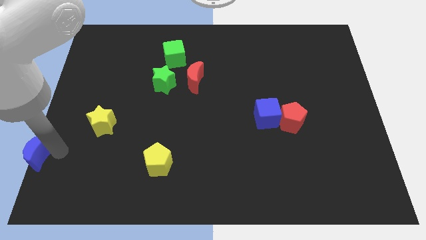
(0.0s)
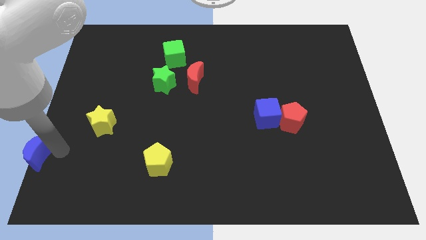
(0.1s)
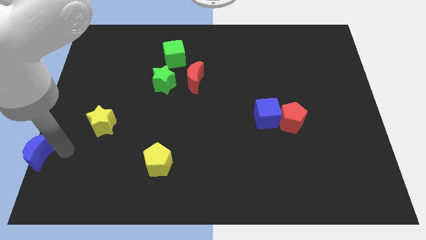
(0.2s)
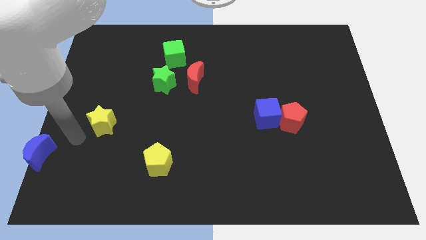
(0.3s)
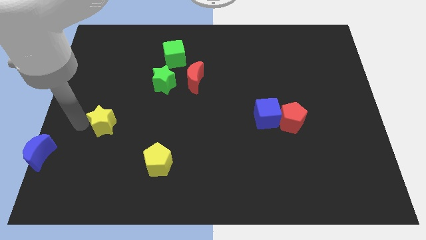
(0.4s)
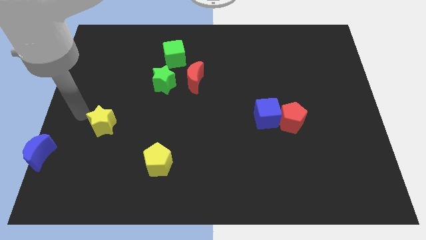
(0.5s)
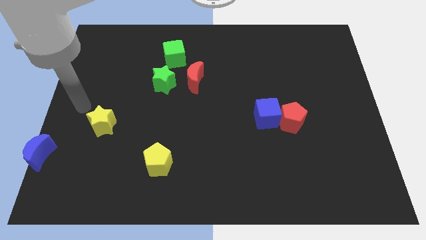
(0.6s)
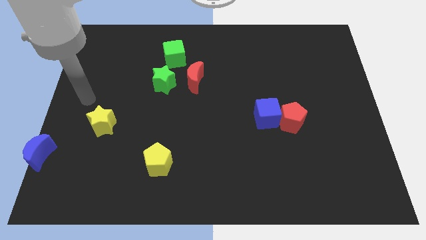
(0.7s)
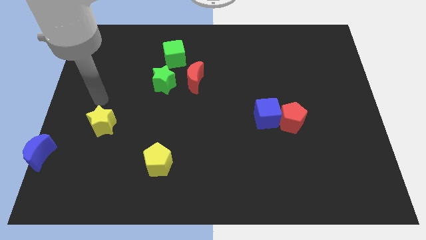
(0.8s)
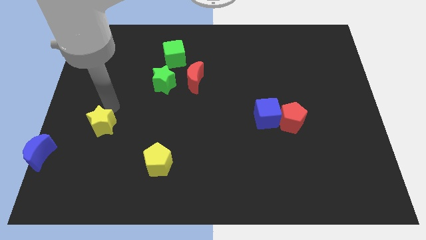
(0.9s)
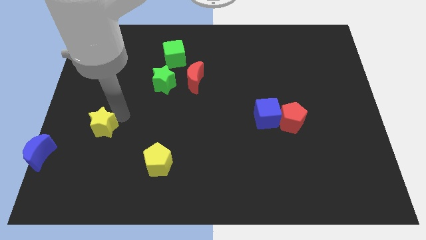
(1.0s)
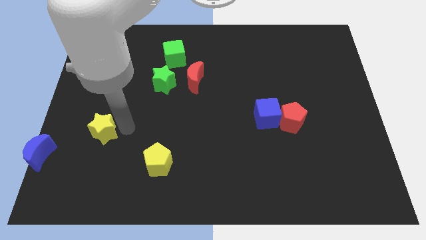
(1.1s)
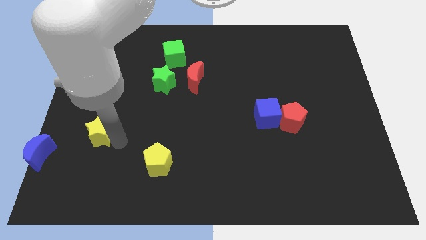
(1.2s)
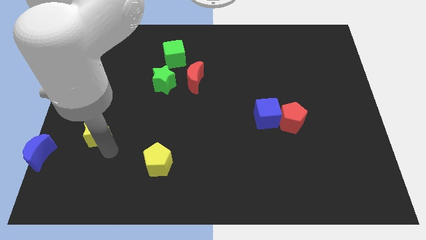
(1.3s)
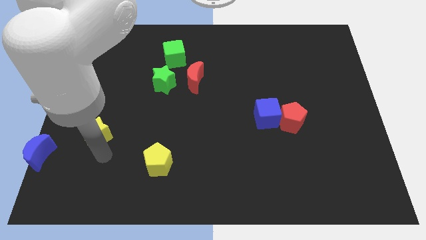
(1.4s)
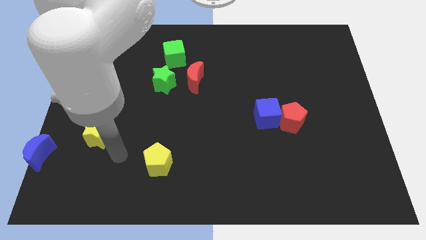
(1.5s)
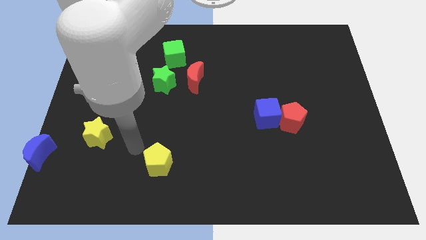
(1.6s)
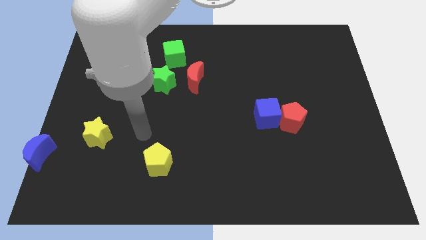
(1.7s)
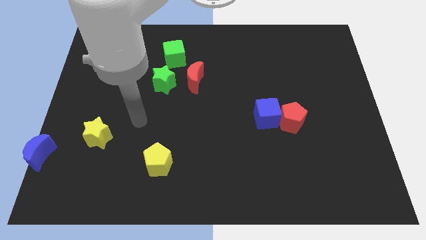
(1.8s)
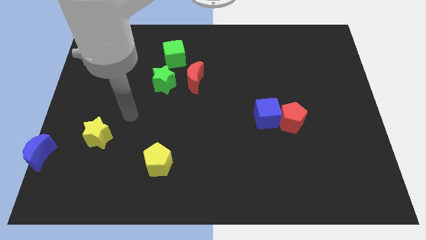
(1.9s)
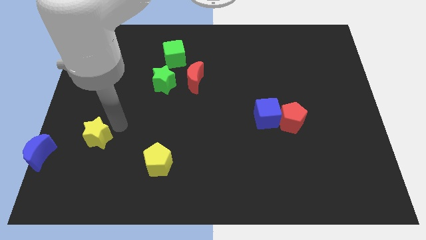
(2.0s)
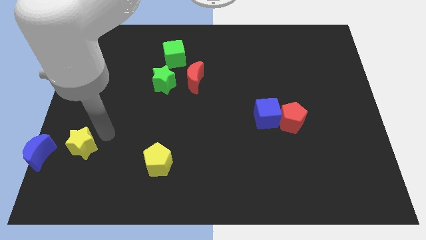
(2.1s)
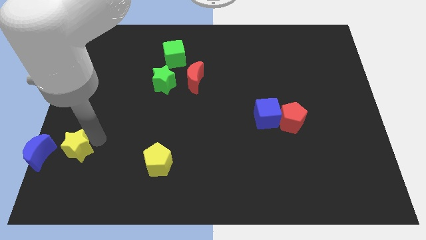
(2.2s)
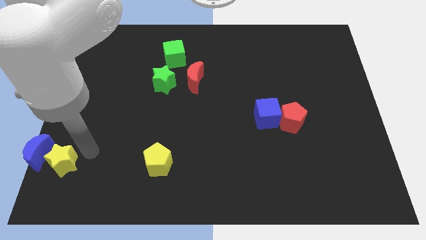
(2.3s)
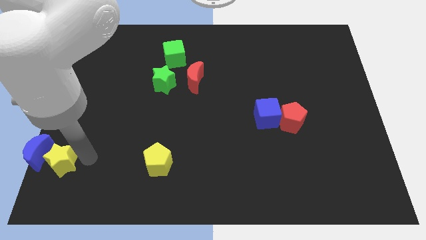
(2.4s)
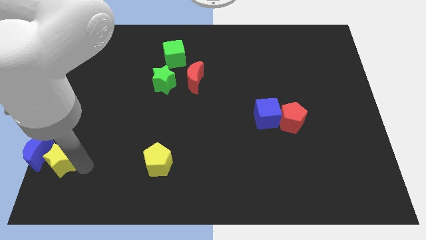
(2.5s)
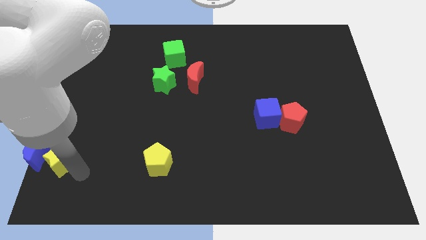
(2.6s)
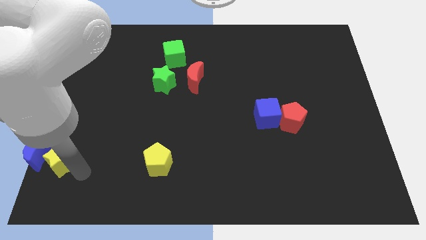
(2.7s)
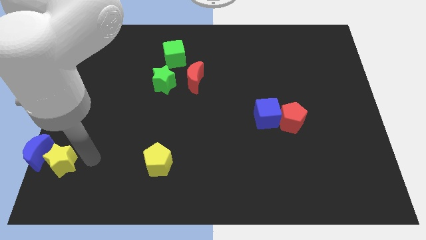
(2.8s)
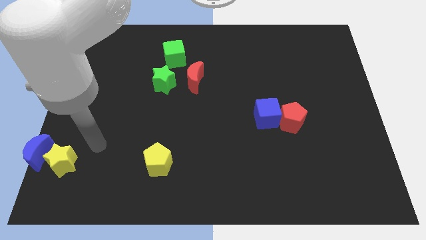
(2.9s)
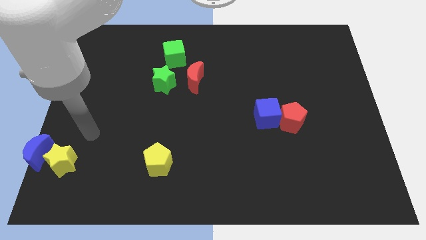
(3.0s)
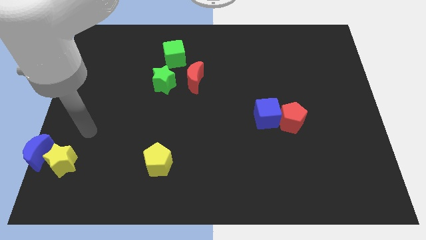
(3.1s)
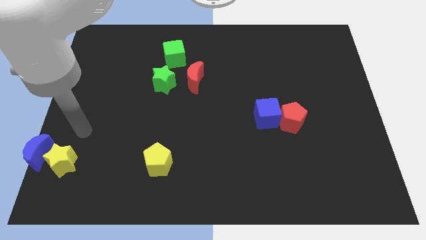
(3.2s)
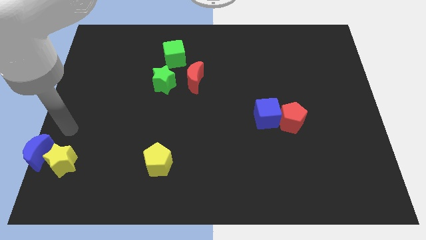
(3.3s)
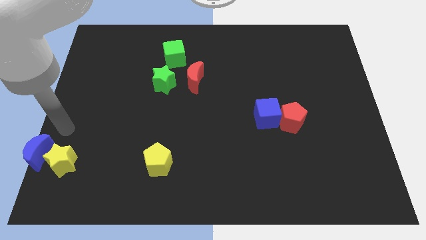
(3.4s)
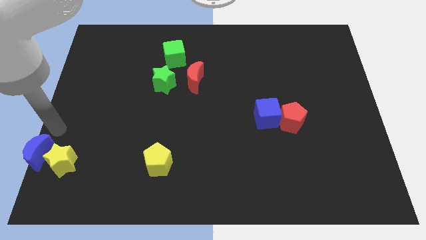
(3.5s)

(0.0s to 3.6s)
push the yellow star to the right of the blue crescent

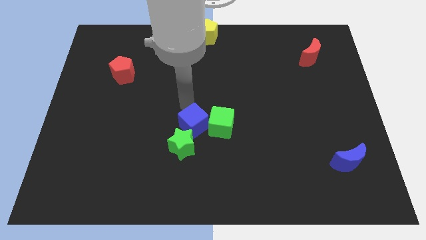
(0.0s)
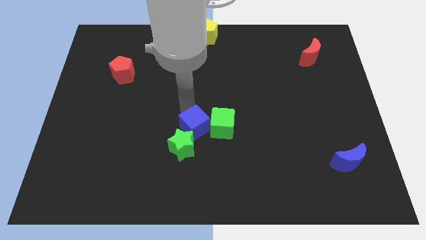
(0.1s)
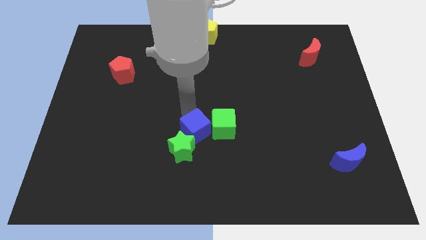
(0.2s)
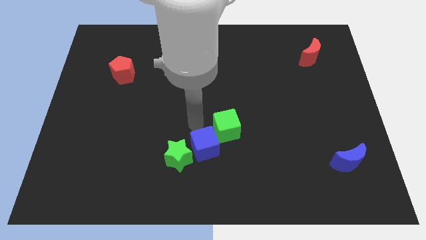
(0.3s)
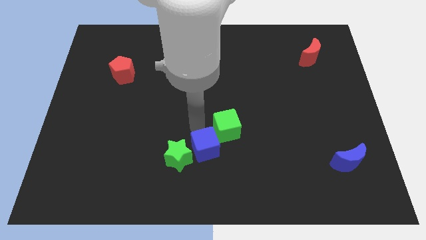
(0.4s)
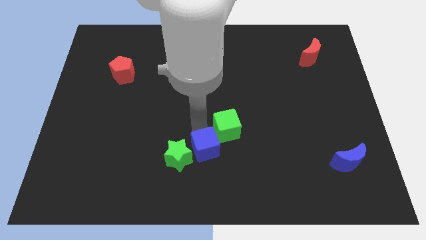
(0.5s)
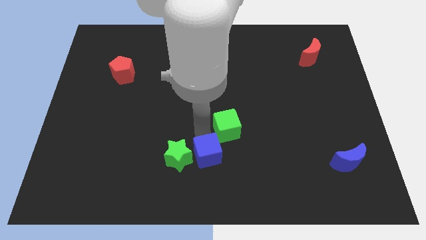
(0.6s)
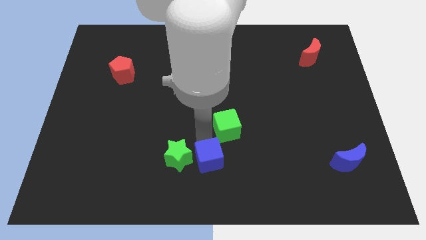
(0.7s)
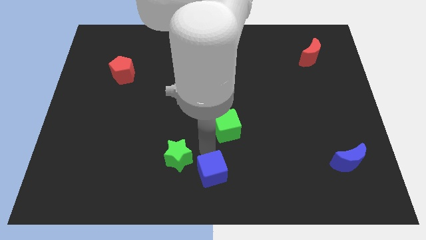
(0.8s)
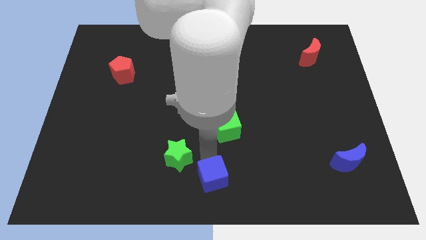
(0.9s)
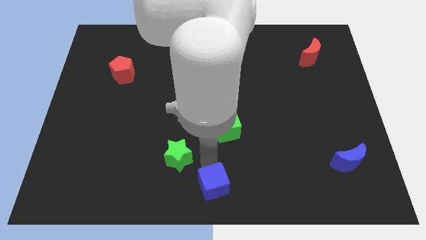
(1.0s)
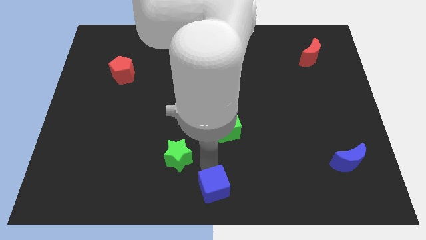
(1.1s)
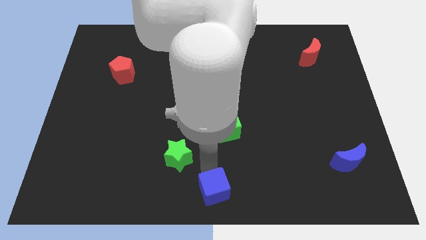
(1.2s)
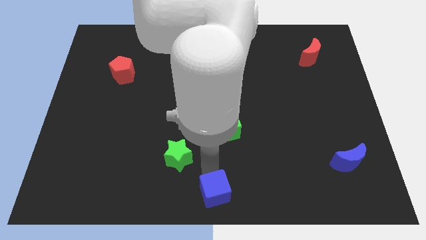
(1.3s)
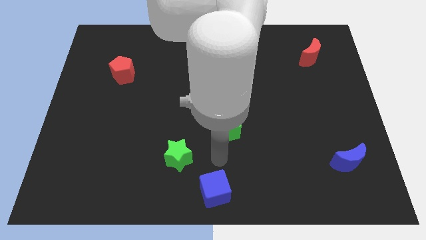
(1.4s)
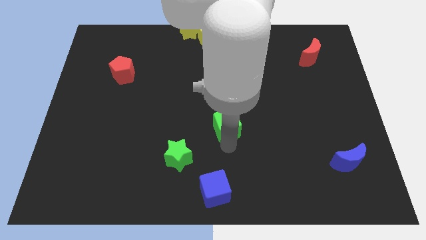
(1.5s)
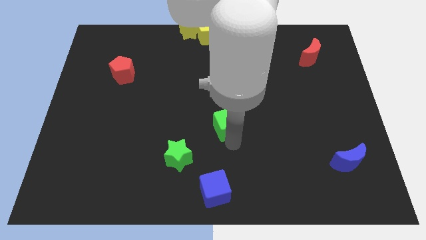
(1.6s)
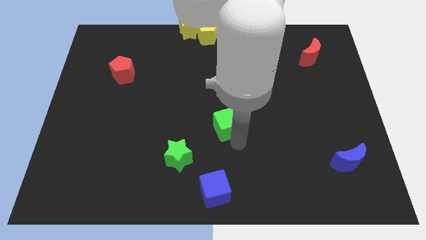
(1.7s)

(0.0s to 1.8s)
place blue cube to the bottom center of the board

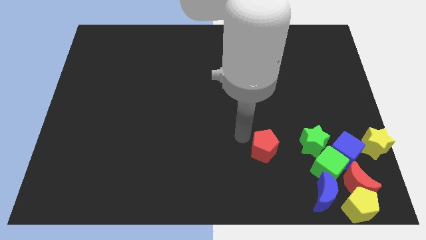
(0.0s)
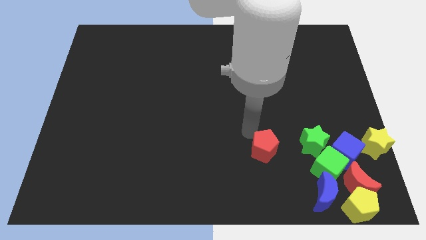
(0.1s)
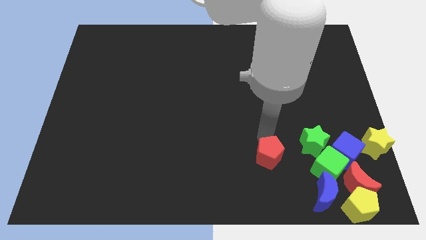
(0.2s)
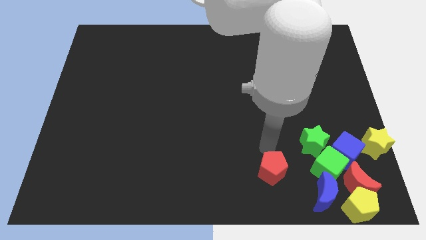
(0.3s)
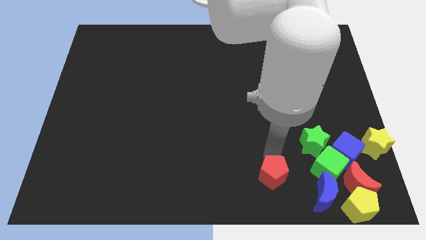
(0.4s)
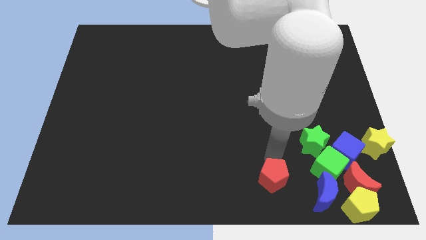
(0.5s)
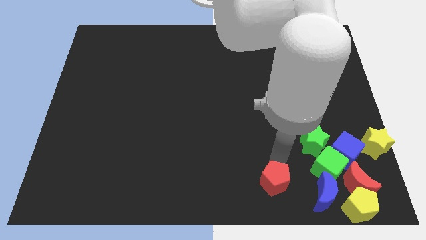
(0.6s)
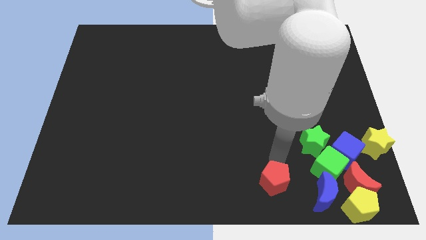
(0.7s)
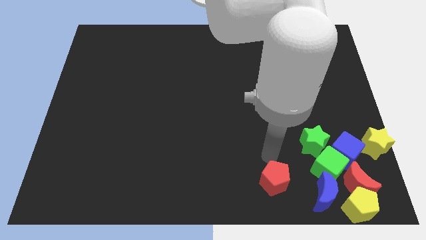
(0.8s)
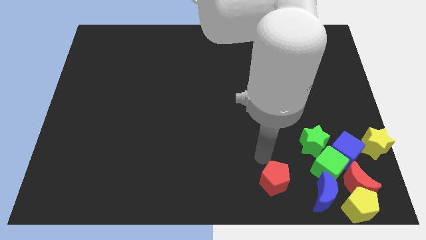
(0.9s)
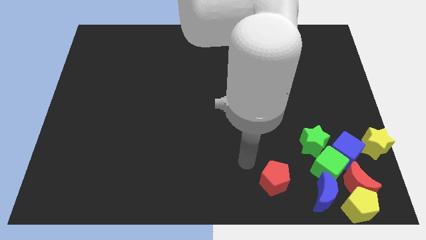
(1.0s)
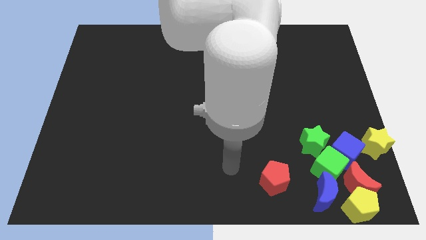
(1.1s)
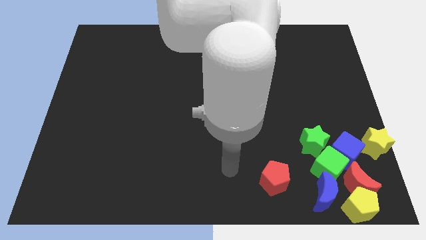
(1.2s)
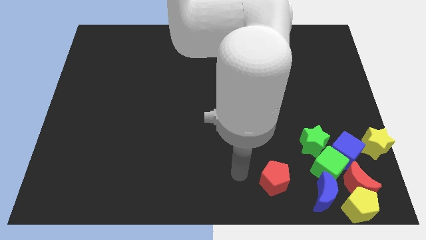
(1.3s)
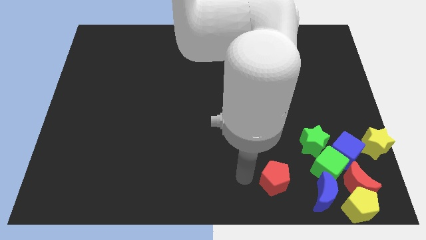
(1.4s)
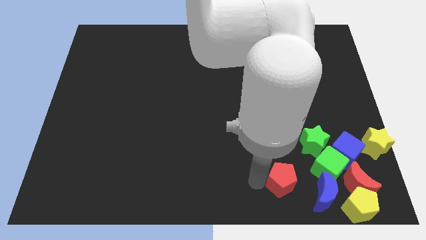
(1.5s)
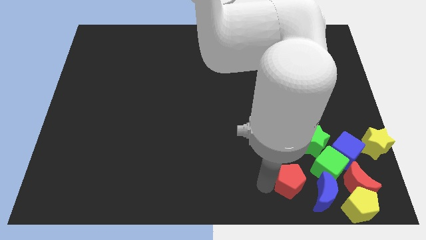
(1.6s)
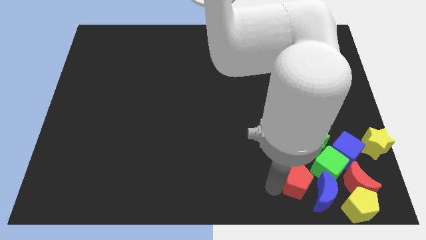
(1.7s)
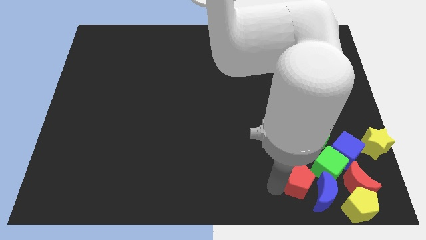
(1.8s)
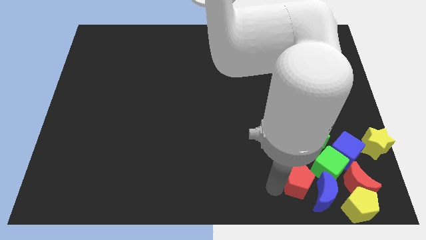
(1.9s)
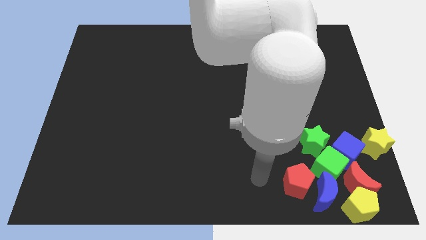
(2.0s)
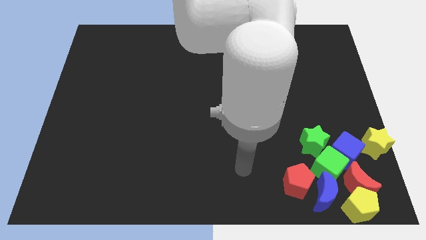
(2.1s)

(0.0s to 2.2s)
move the red pentagon to the left of the blue moon

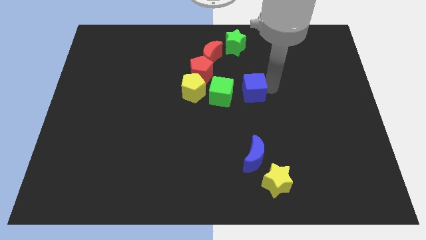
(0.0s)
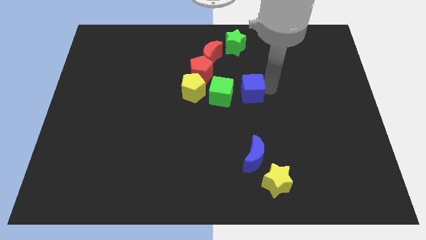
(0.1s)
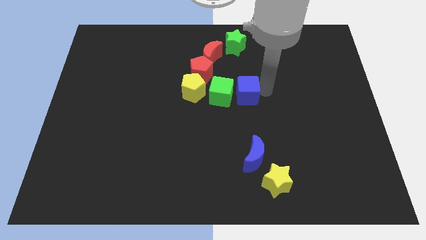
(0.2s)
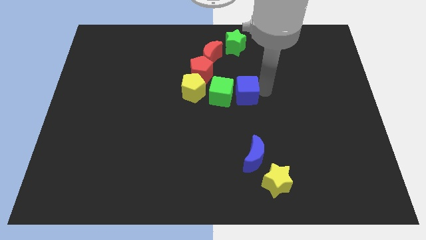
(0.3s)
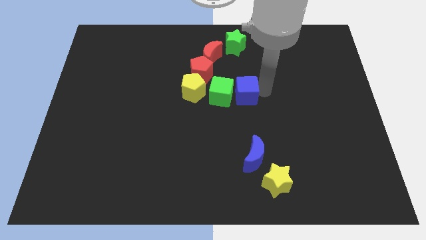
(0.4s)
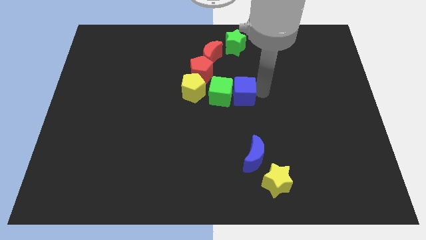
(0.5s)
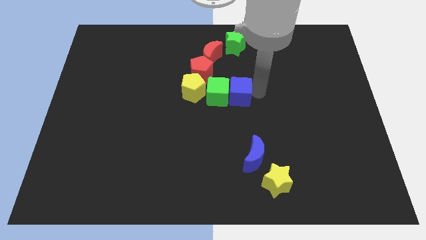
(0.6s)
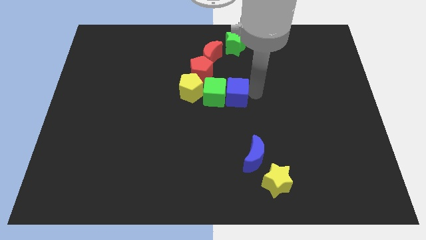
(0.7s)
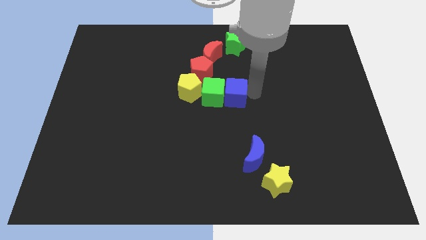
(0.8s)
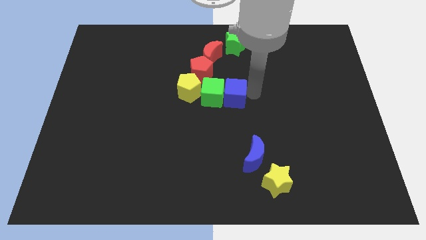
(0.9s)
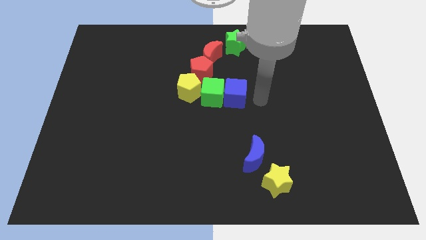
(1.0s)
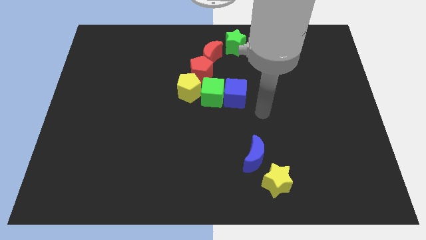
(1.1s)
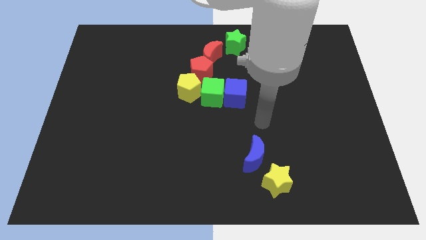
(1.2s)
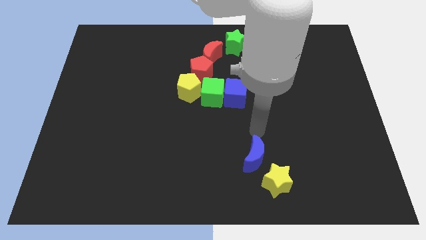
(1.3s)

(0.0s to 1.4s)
move the blue cube into the right of the green cube
